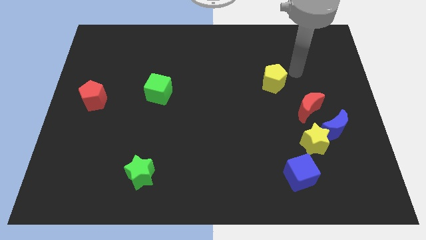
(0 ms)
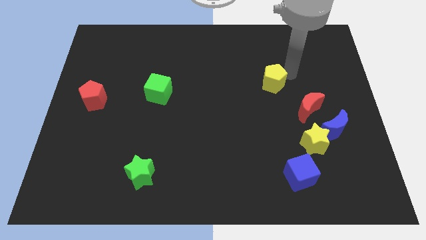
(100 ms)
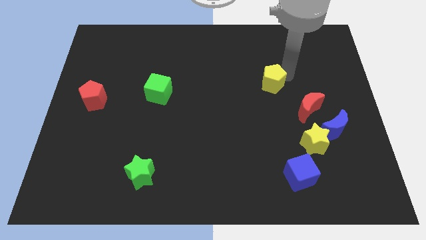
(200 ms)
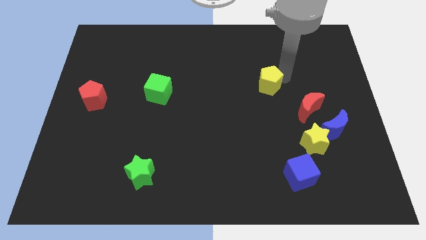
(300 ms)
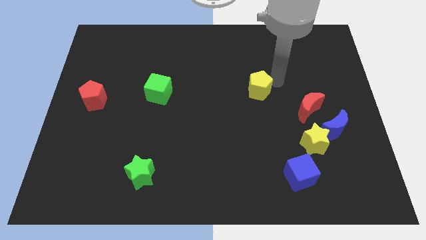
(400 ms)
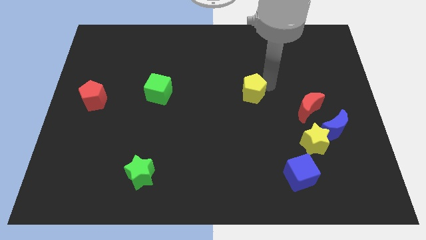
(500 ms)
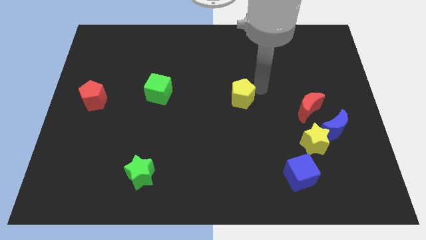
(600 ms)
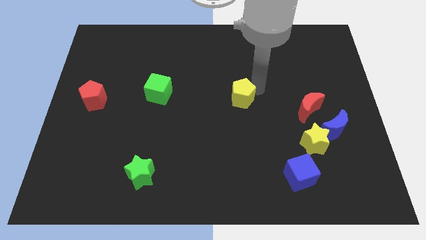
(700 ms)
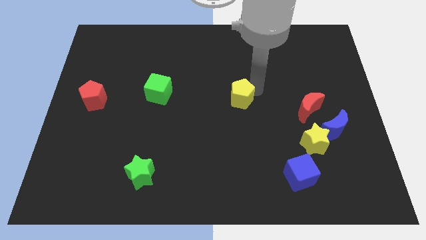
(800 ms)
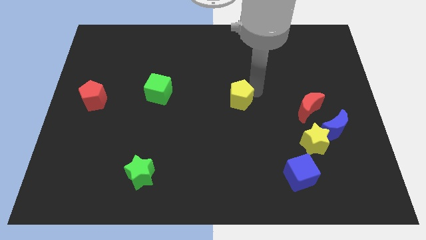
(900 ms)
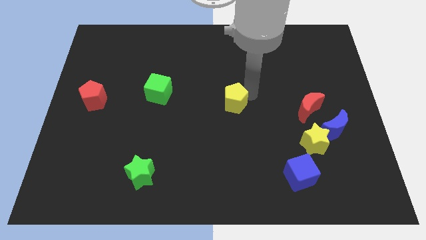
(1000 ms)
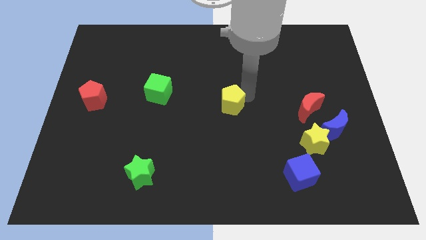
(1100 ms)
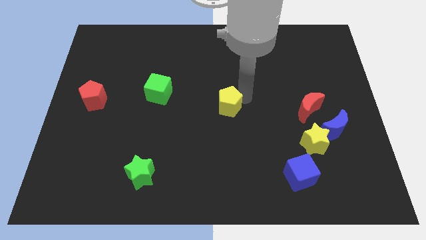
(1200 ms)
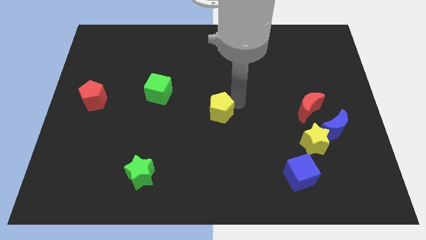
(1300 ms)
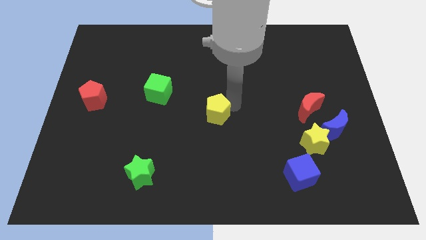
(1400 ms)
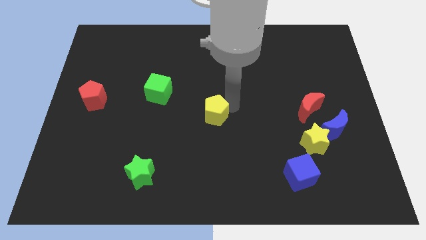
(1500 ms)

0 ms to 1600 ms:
put the yellow pentagon diagonally in between the yellow star and the green cube

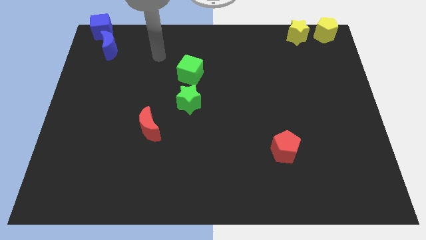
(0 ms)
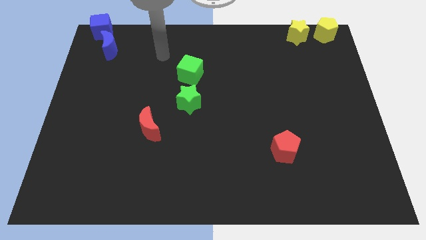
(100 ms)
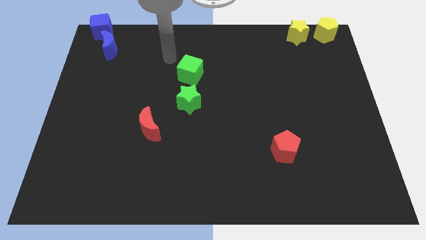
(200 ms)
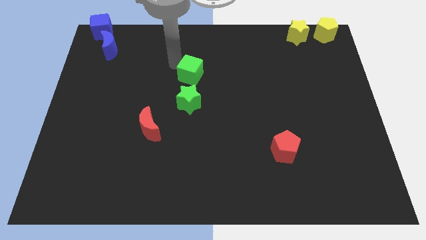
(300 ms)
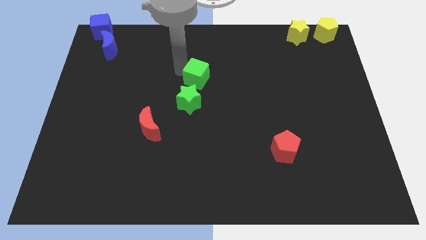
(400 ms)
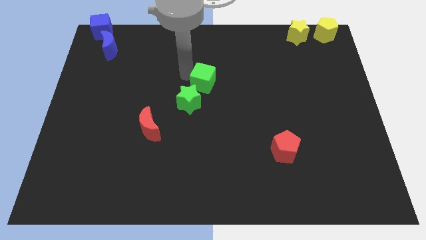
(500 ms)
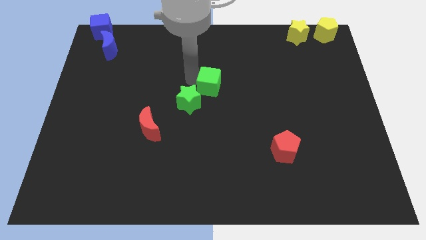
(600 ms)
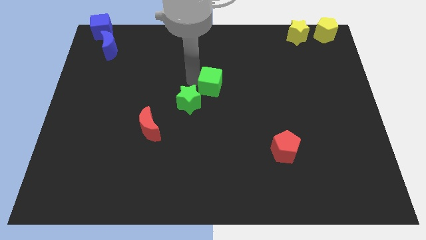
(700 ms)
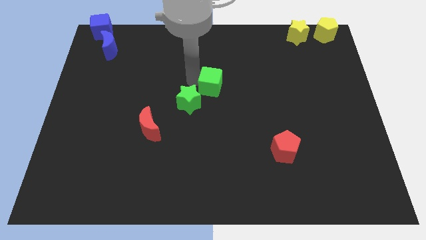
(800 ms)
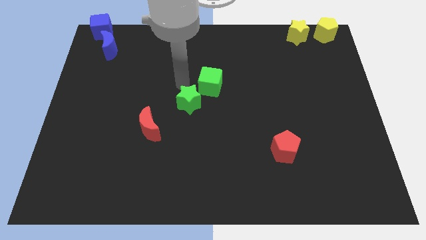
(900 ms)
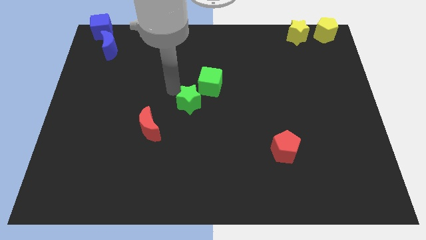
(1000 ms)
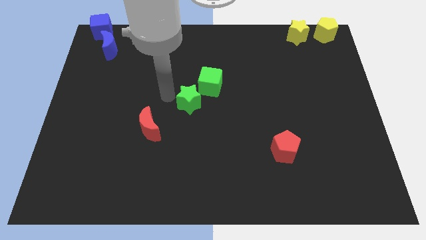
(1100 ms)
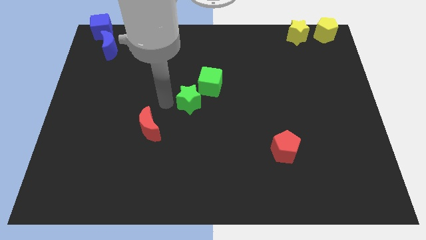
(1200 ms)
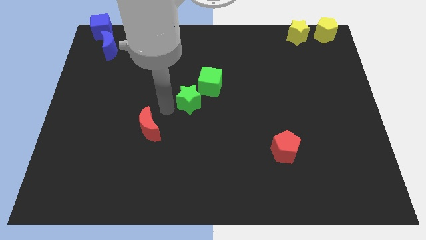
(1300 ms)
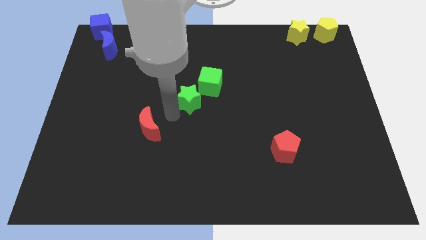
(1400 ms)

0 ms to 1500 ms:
slightly push the green cube towards the right

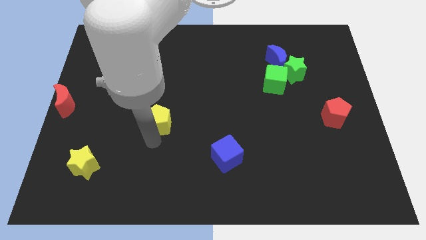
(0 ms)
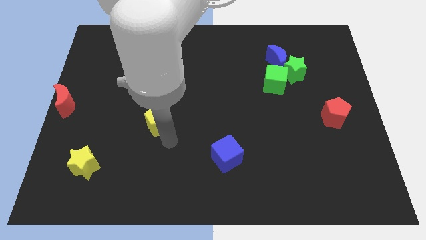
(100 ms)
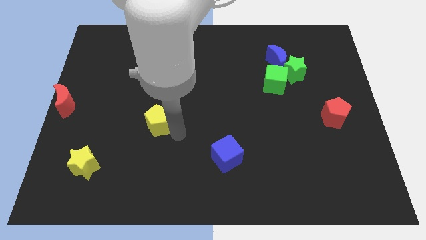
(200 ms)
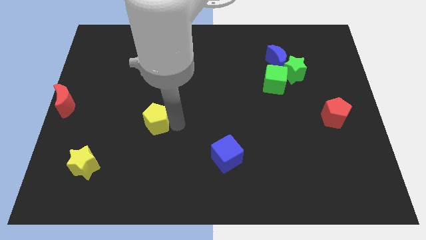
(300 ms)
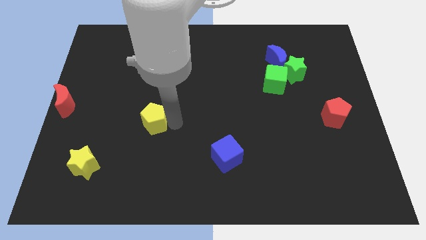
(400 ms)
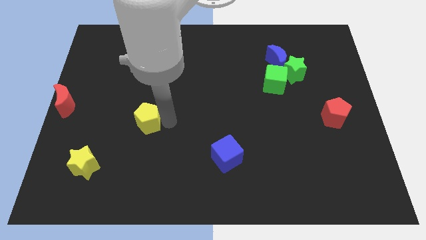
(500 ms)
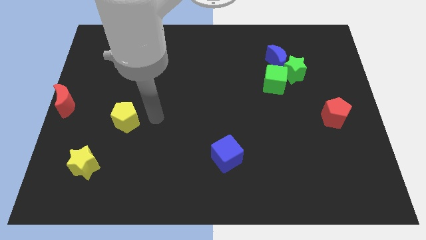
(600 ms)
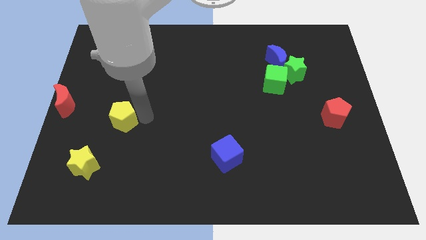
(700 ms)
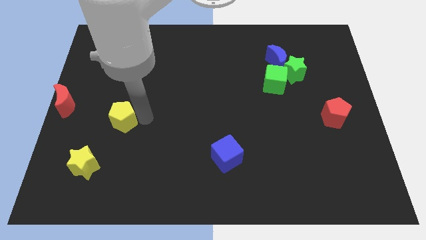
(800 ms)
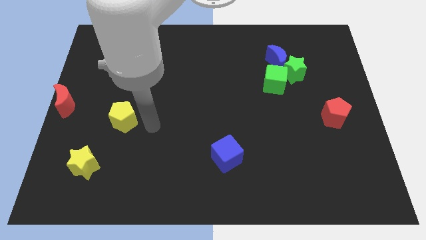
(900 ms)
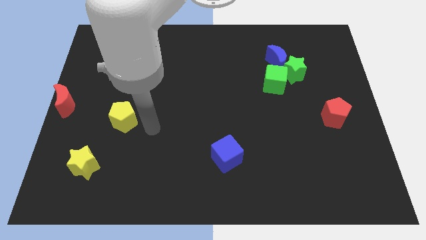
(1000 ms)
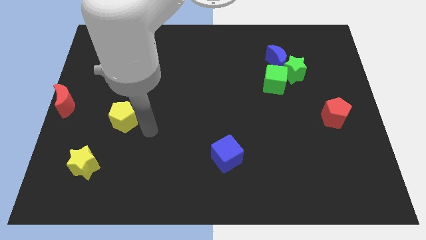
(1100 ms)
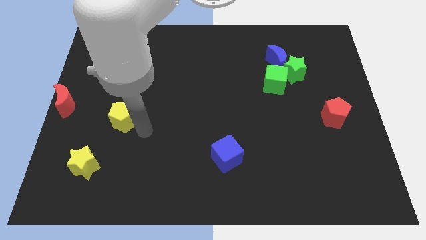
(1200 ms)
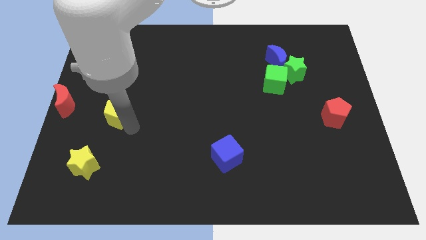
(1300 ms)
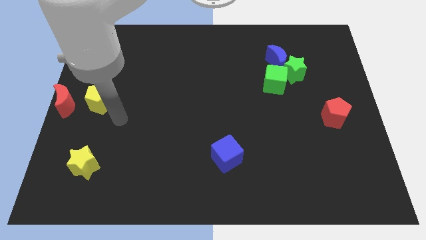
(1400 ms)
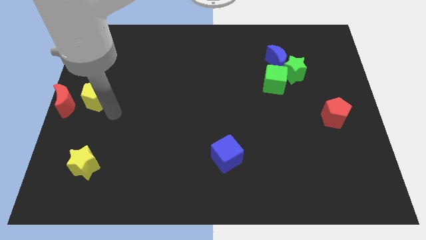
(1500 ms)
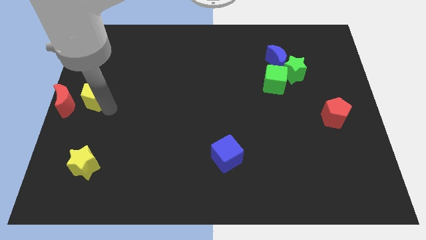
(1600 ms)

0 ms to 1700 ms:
push yellow pentagon to the right of the red crescent

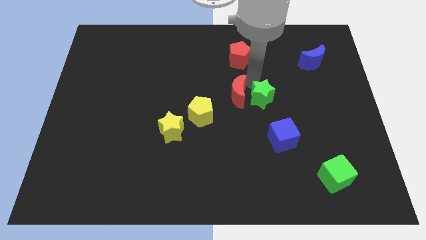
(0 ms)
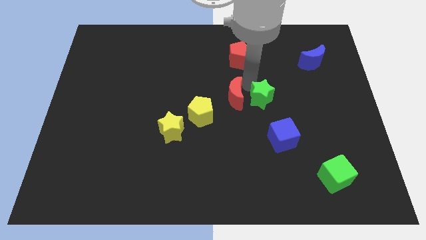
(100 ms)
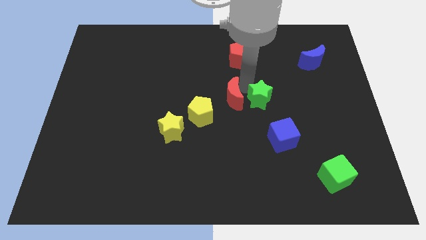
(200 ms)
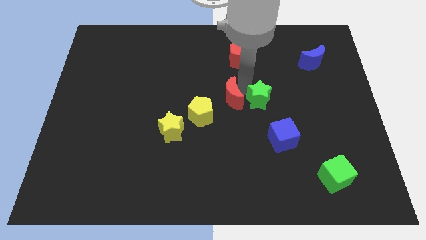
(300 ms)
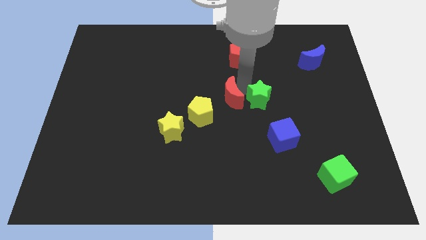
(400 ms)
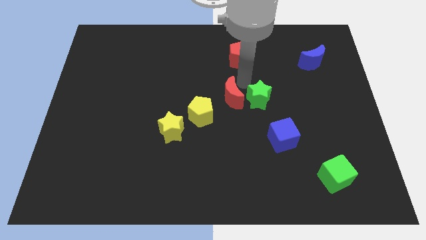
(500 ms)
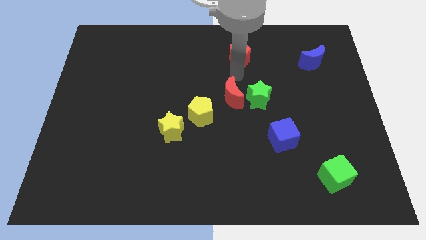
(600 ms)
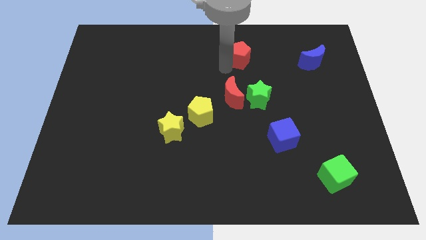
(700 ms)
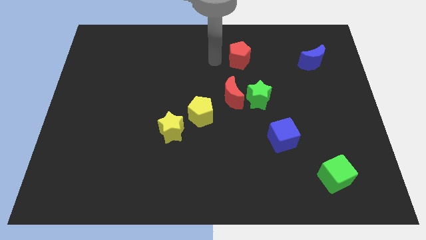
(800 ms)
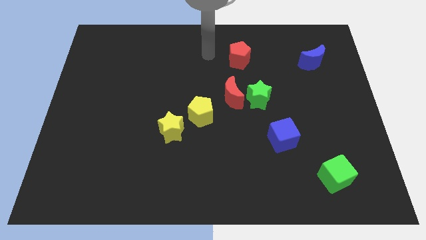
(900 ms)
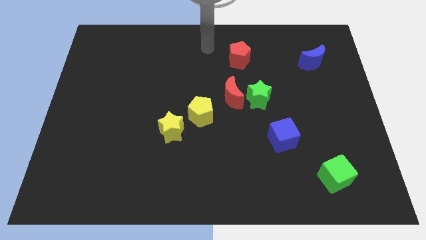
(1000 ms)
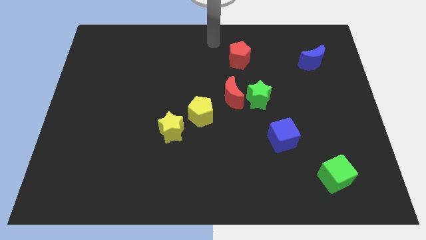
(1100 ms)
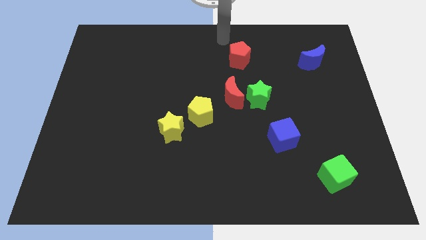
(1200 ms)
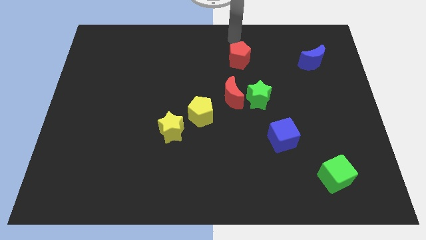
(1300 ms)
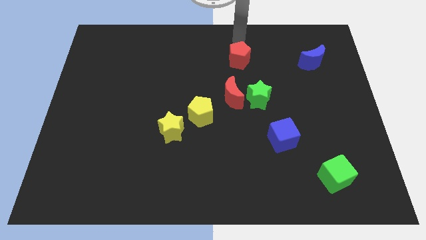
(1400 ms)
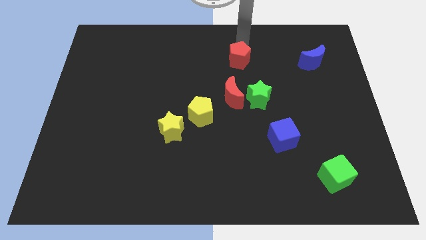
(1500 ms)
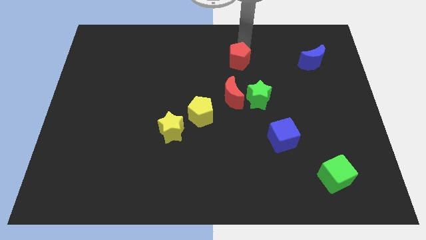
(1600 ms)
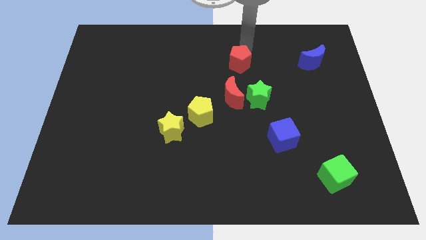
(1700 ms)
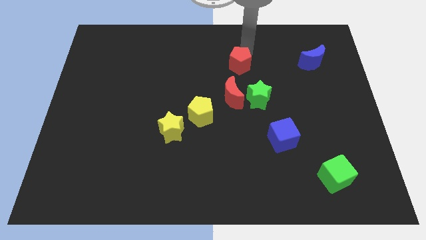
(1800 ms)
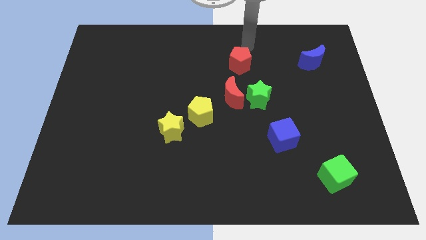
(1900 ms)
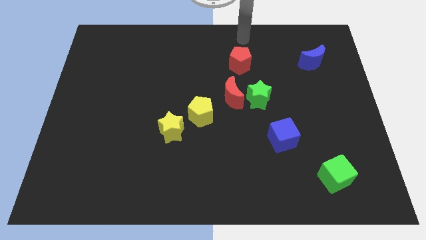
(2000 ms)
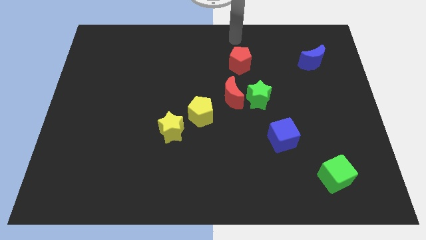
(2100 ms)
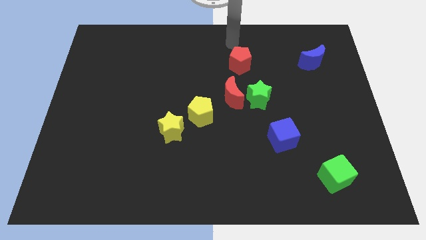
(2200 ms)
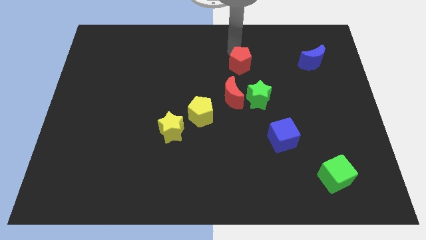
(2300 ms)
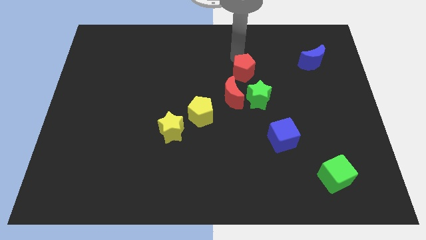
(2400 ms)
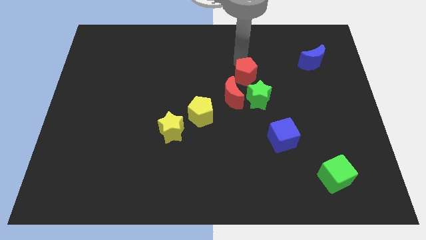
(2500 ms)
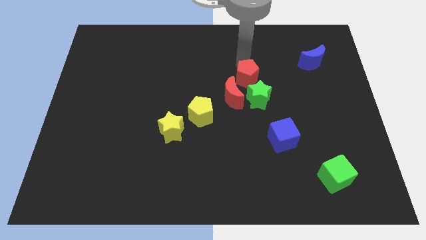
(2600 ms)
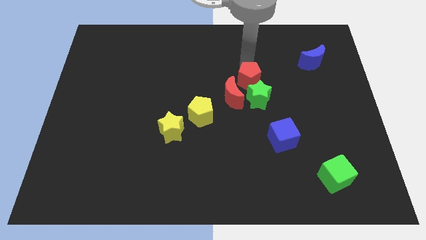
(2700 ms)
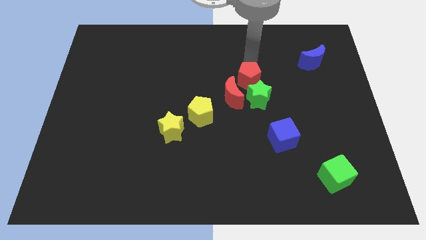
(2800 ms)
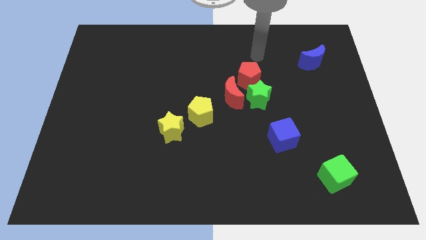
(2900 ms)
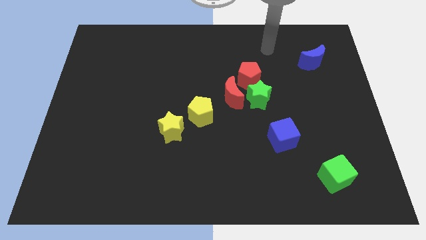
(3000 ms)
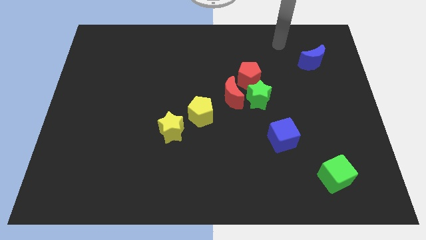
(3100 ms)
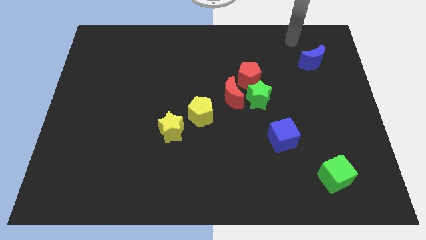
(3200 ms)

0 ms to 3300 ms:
move the red pentagon to the top left to the green star

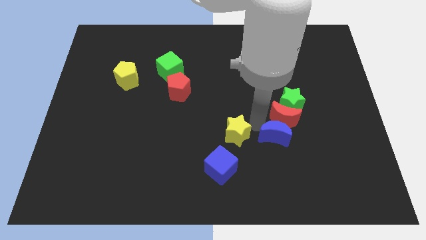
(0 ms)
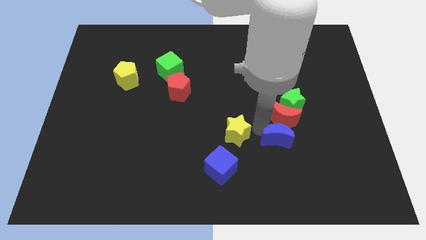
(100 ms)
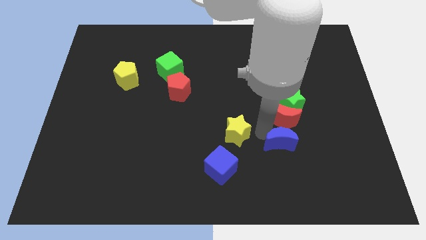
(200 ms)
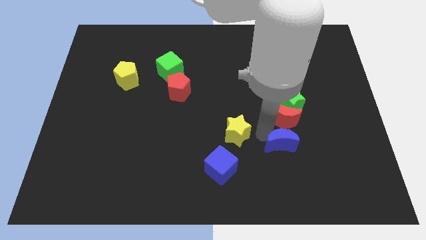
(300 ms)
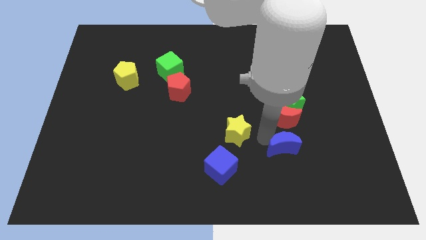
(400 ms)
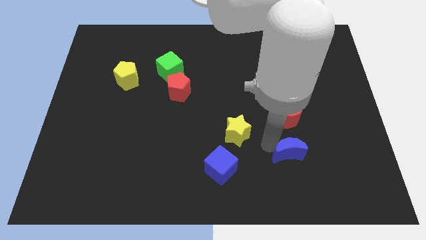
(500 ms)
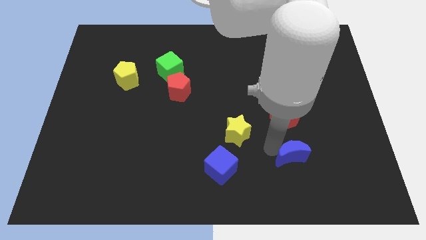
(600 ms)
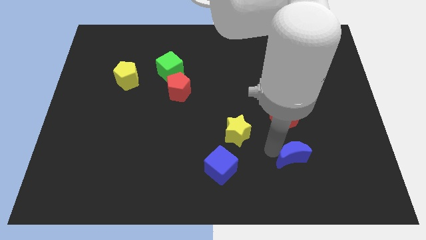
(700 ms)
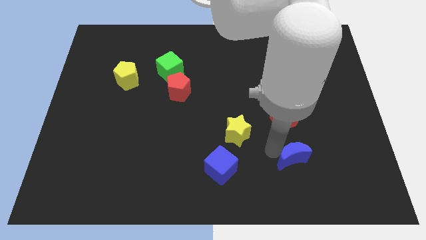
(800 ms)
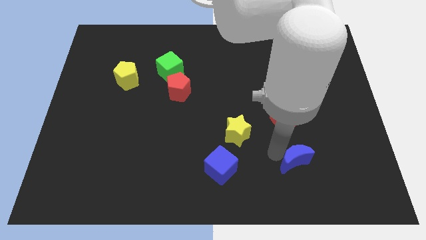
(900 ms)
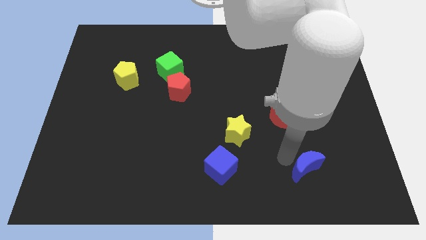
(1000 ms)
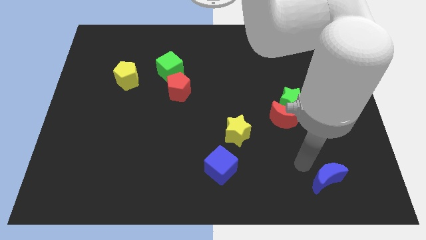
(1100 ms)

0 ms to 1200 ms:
place the blue moon right to the blue cube
